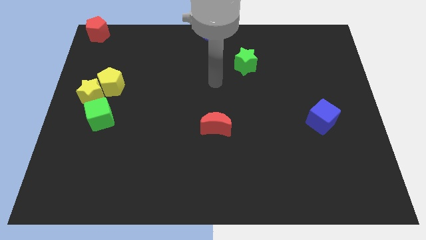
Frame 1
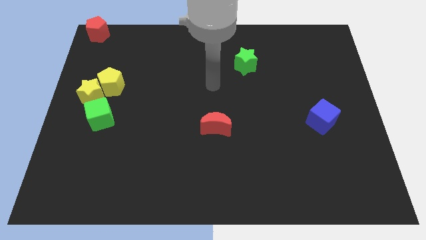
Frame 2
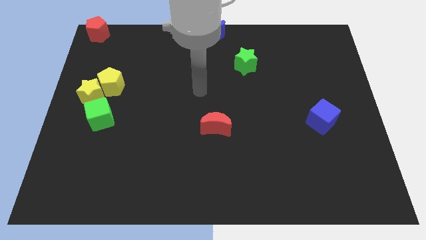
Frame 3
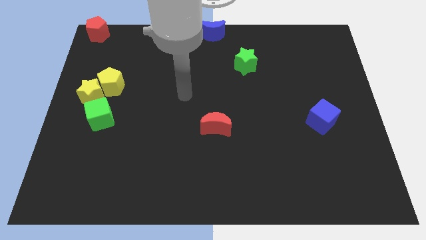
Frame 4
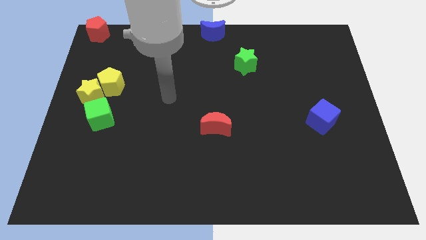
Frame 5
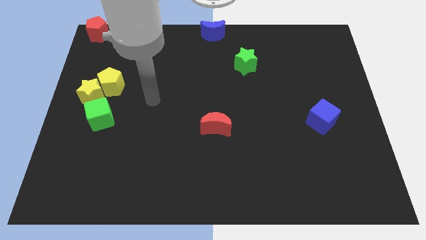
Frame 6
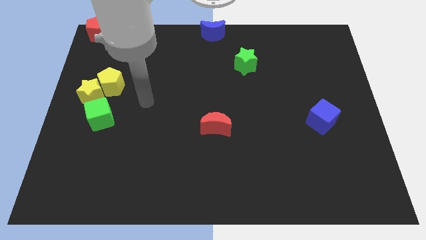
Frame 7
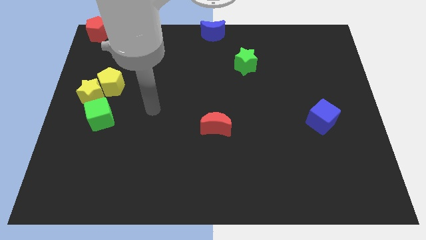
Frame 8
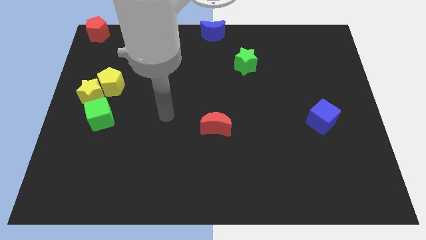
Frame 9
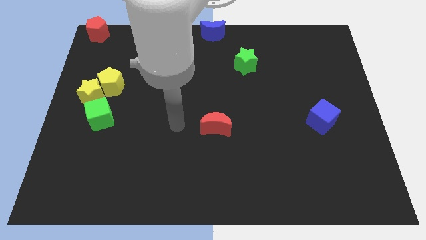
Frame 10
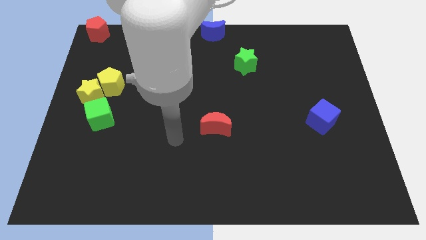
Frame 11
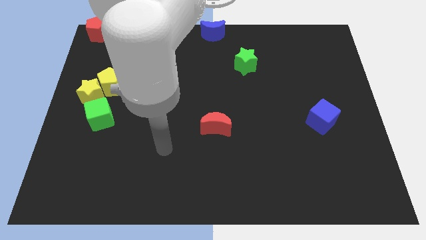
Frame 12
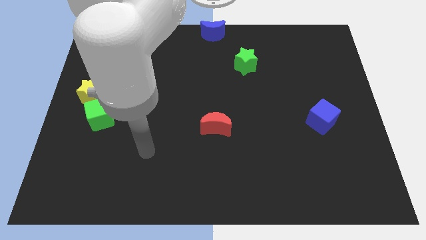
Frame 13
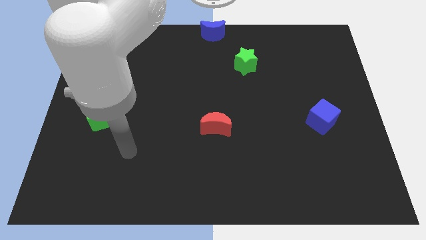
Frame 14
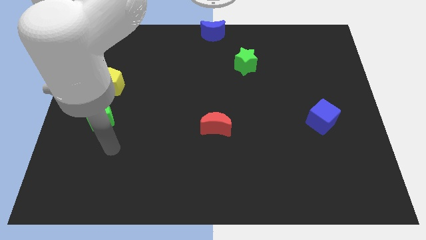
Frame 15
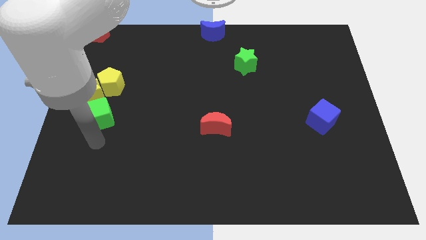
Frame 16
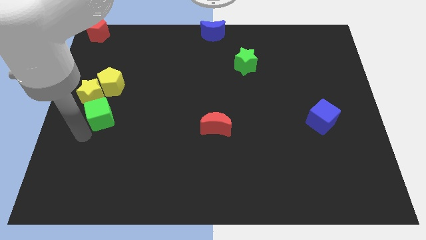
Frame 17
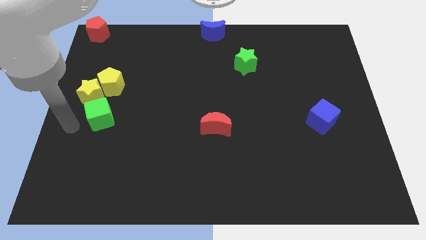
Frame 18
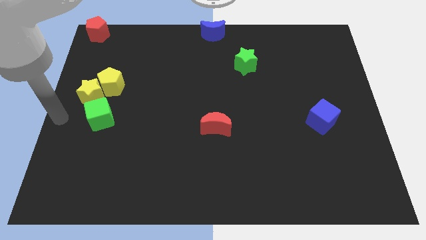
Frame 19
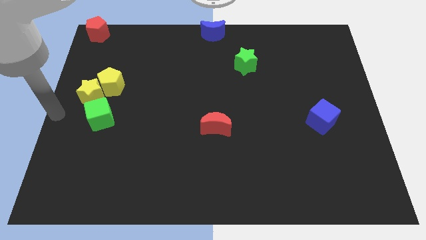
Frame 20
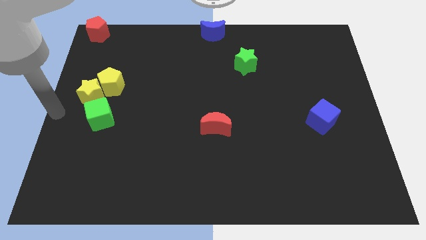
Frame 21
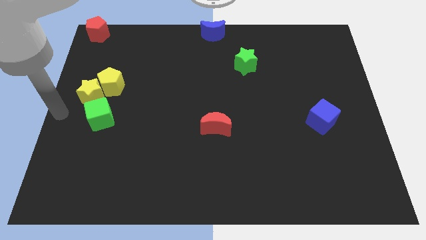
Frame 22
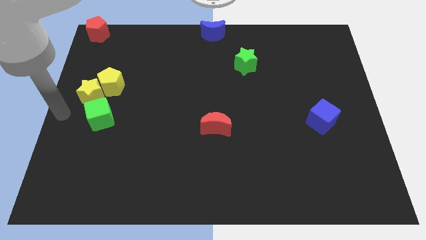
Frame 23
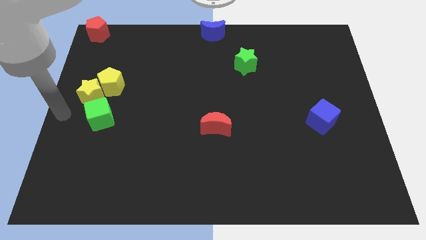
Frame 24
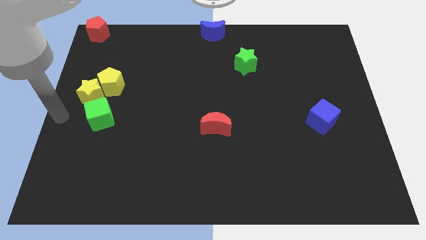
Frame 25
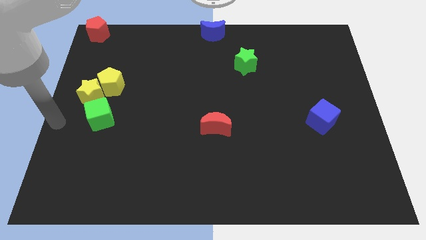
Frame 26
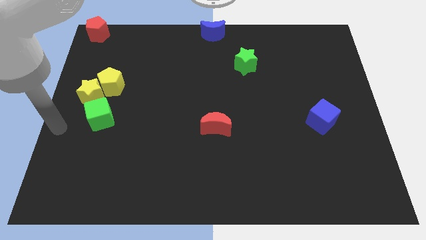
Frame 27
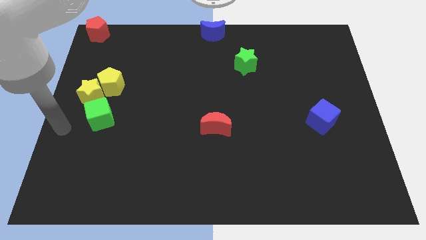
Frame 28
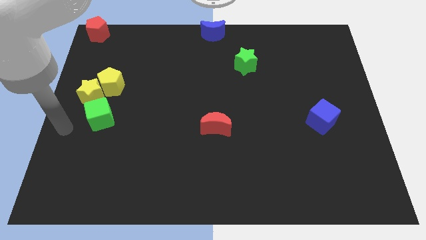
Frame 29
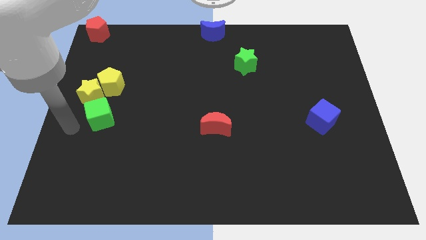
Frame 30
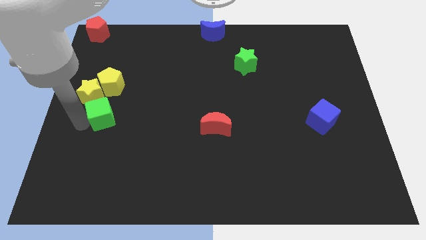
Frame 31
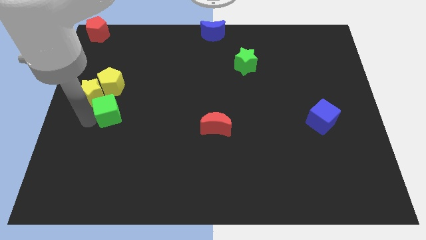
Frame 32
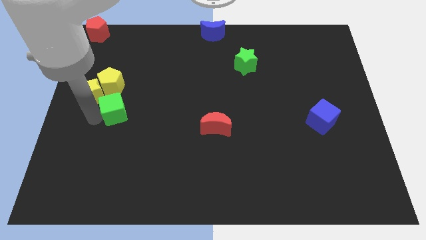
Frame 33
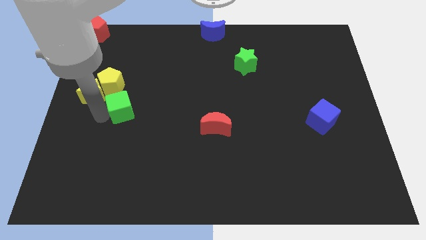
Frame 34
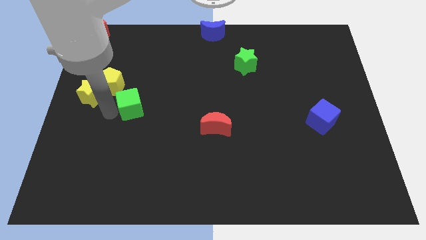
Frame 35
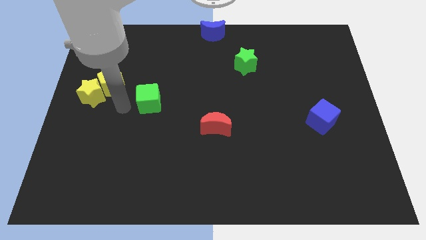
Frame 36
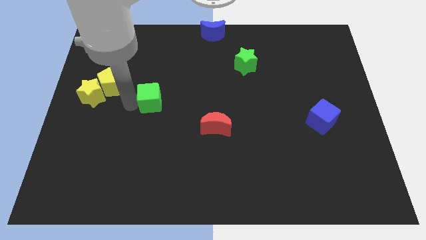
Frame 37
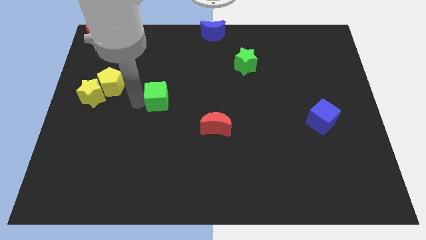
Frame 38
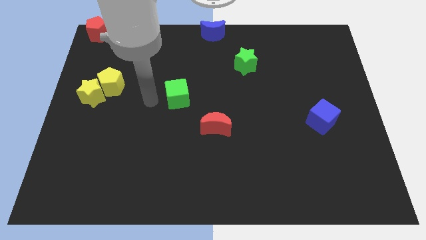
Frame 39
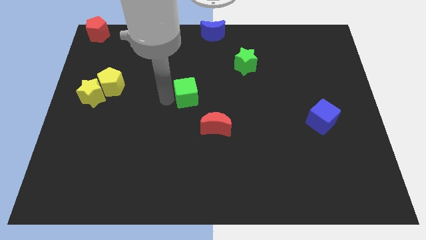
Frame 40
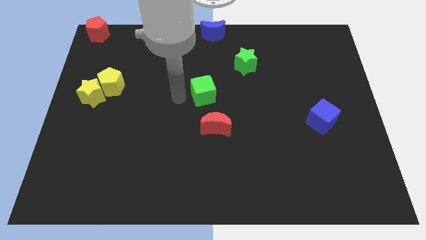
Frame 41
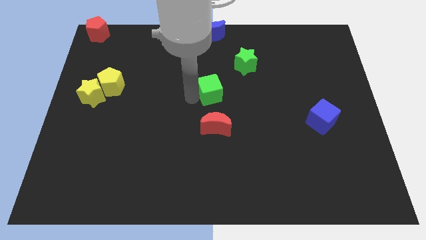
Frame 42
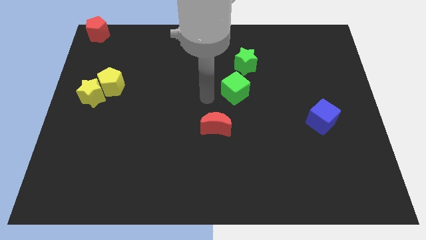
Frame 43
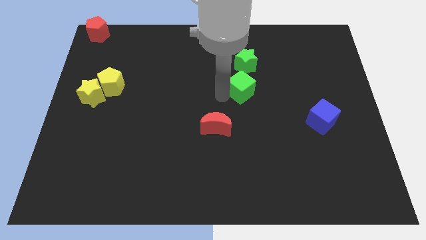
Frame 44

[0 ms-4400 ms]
put the green cube in between red crescent and green star

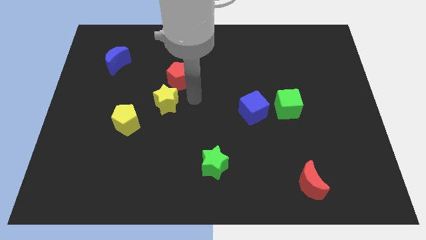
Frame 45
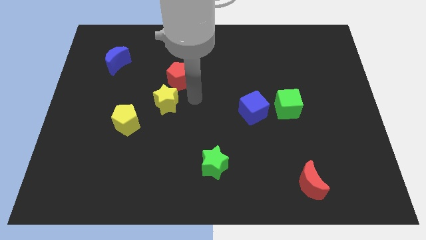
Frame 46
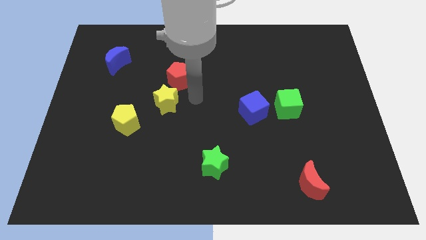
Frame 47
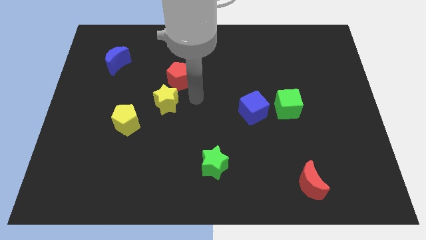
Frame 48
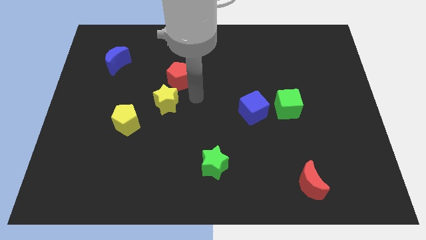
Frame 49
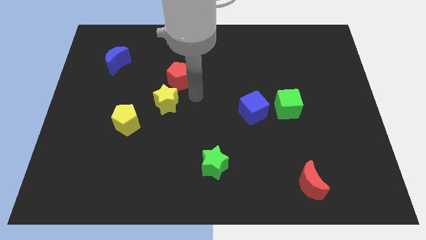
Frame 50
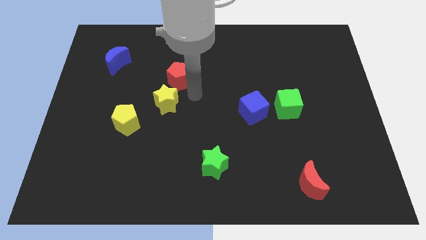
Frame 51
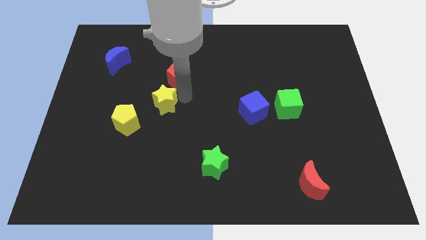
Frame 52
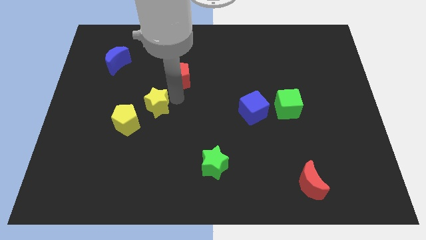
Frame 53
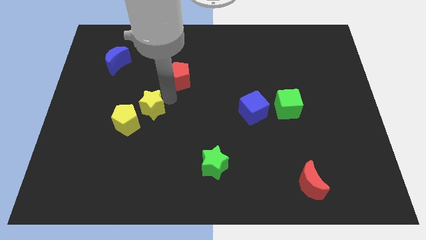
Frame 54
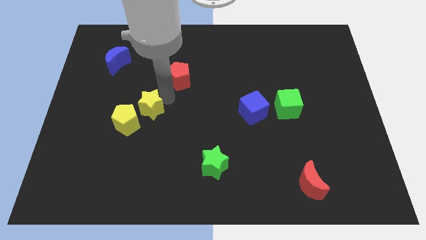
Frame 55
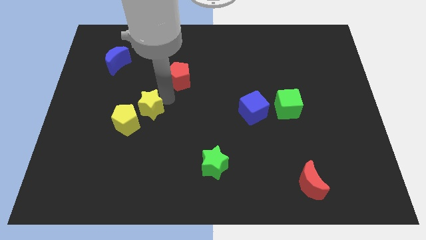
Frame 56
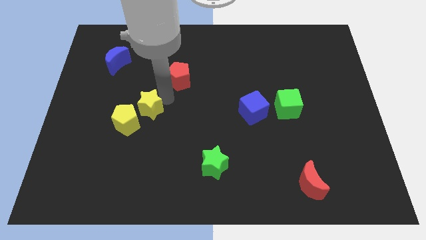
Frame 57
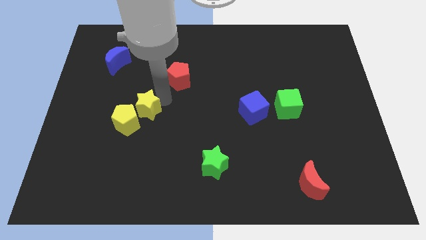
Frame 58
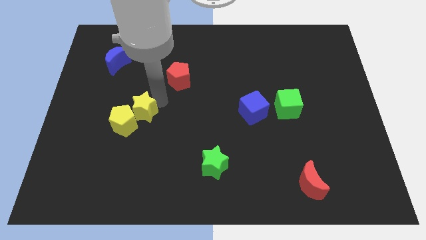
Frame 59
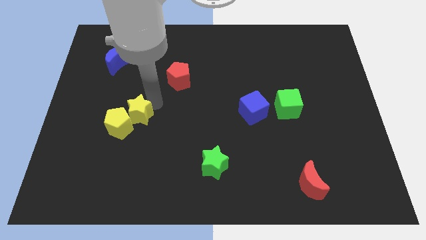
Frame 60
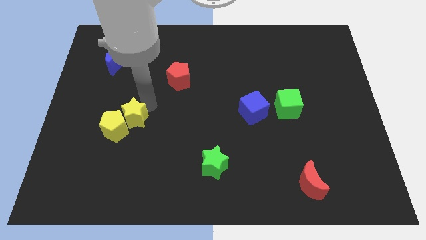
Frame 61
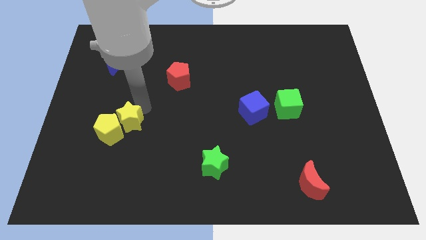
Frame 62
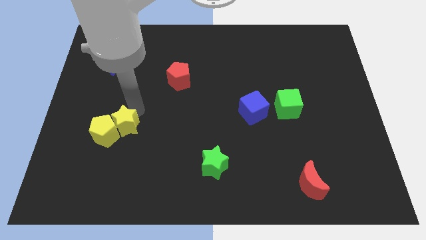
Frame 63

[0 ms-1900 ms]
push the yellow star into the yellow pentagon

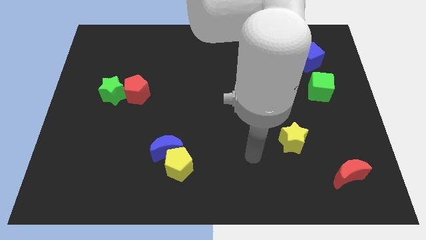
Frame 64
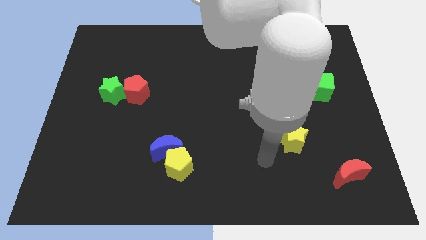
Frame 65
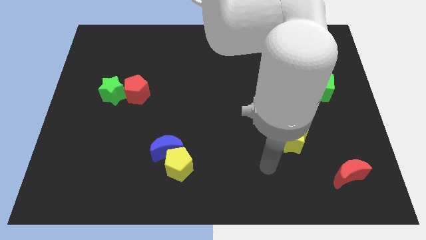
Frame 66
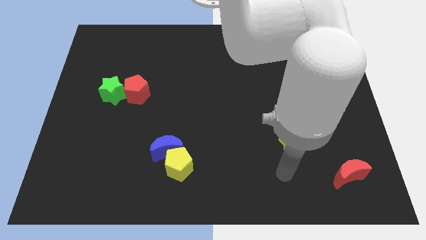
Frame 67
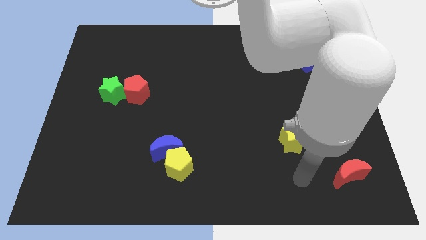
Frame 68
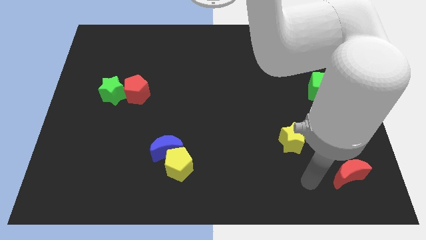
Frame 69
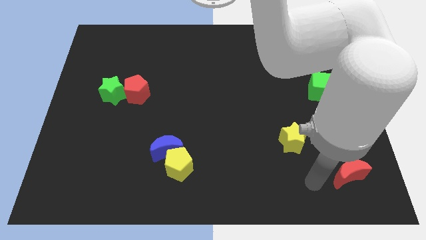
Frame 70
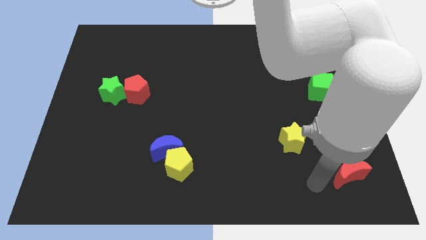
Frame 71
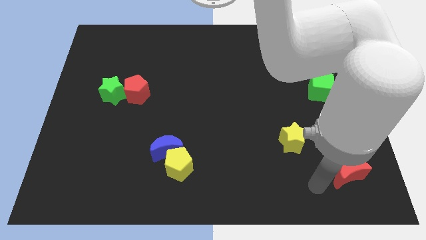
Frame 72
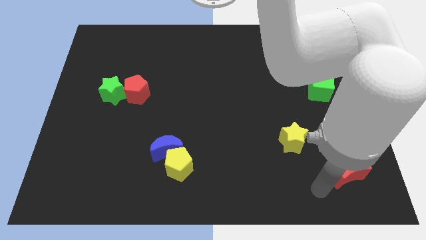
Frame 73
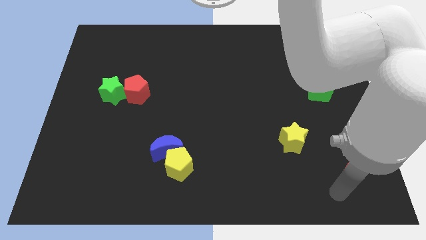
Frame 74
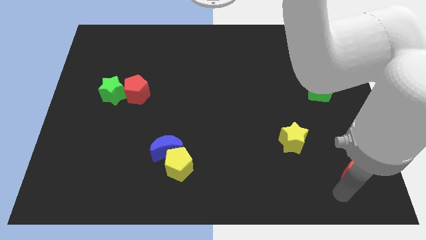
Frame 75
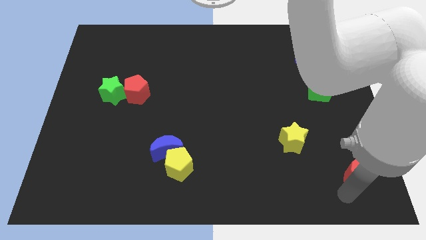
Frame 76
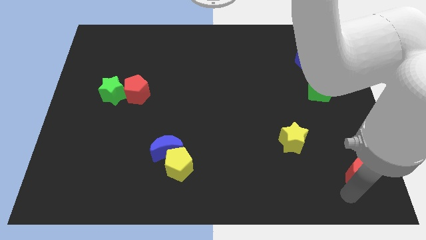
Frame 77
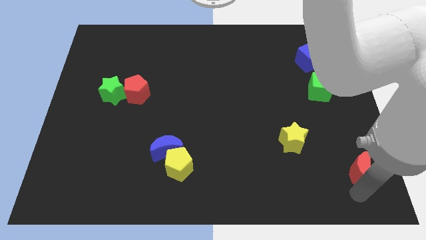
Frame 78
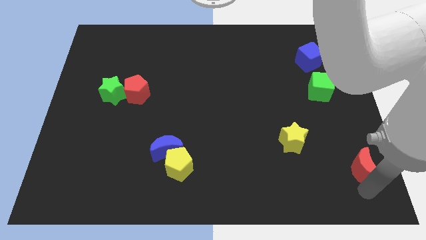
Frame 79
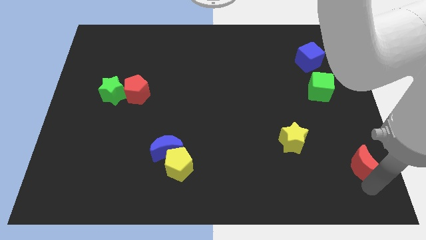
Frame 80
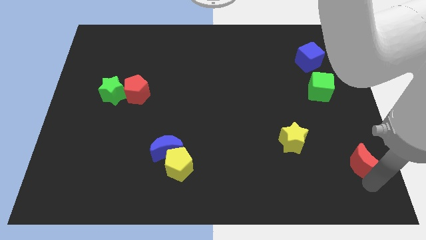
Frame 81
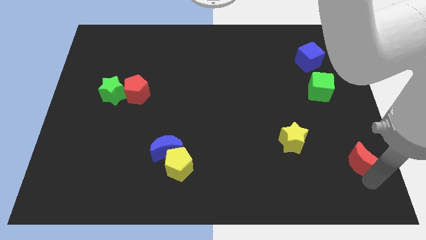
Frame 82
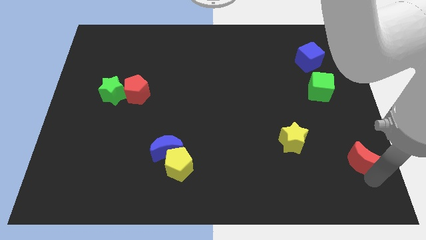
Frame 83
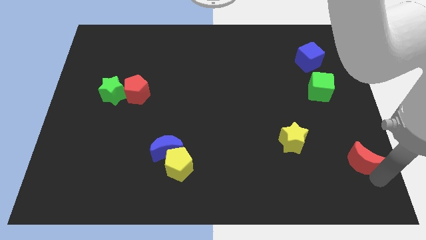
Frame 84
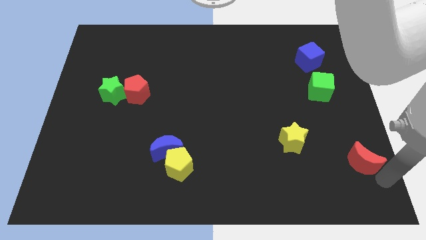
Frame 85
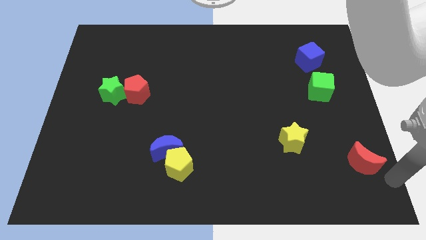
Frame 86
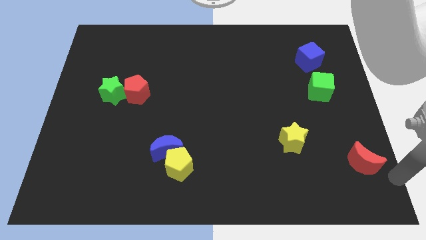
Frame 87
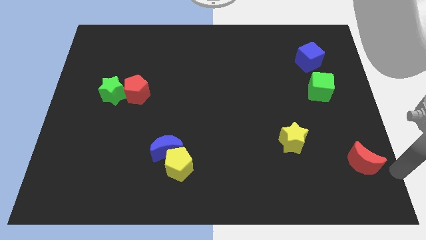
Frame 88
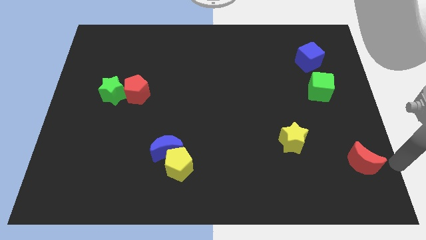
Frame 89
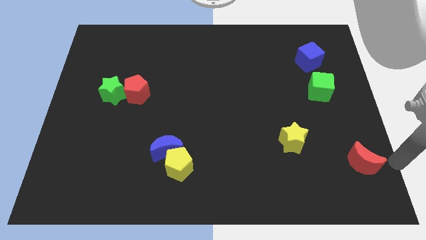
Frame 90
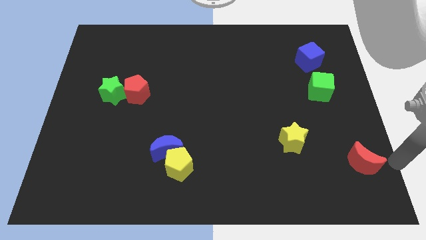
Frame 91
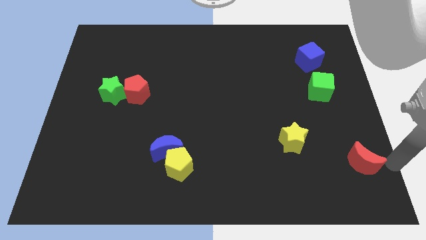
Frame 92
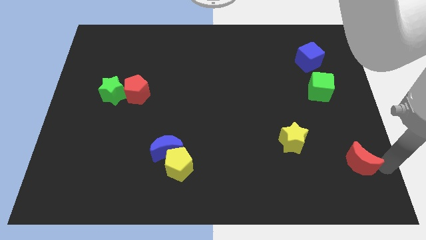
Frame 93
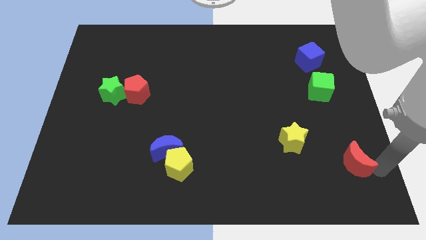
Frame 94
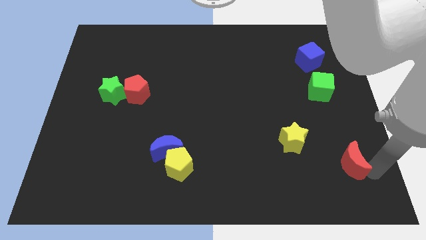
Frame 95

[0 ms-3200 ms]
slide red moon to the bottom right of yellow star
